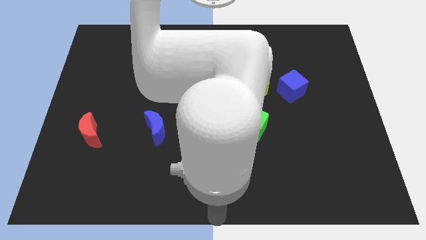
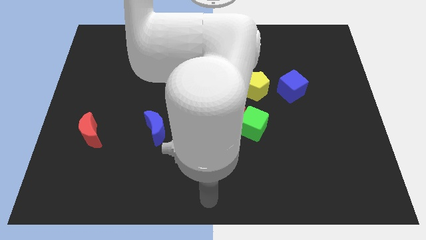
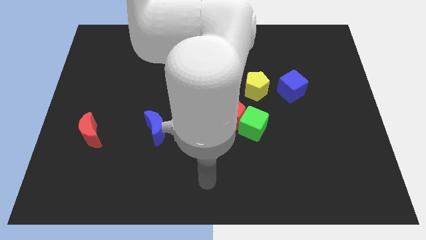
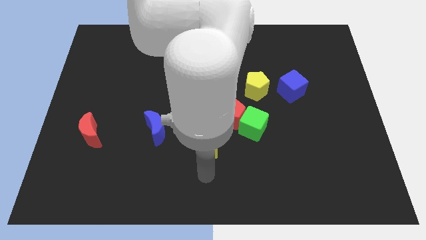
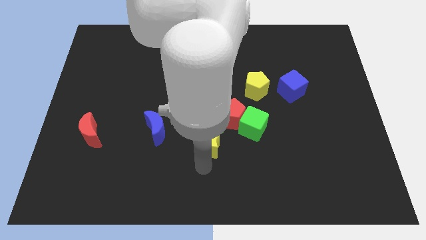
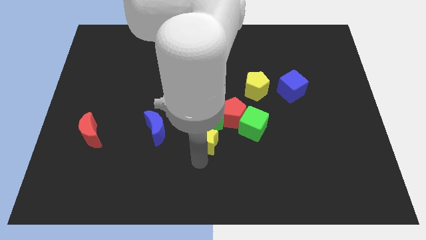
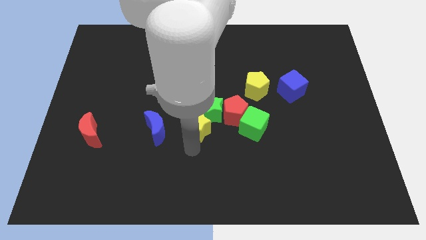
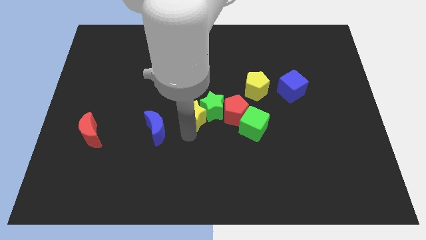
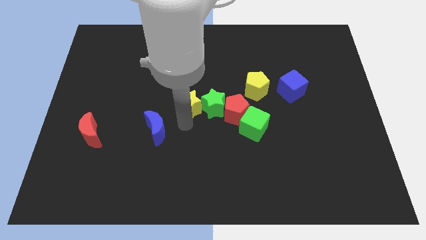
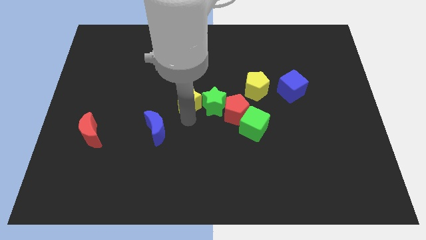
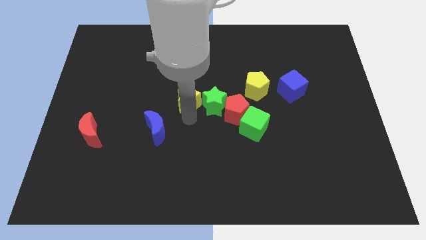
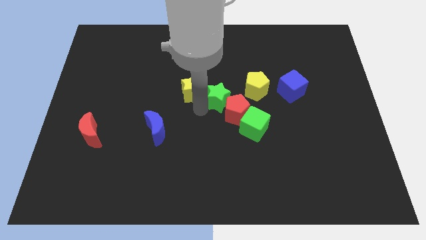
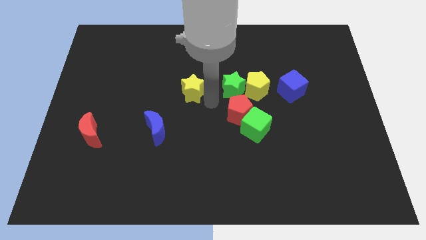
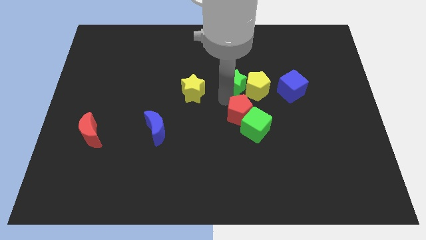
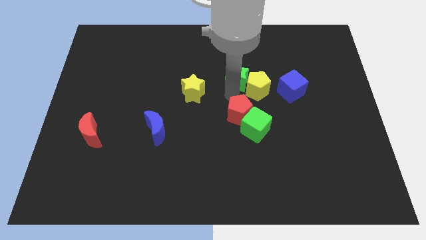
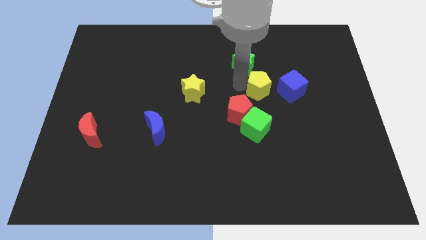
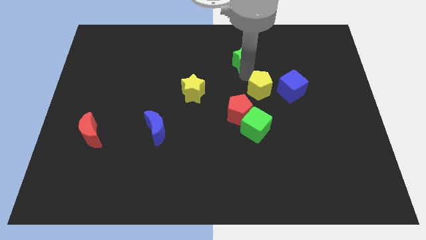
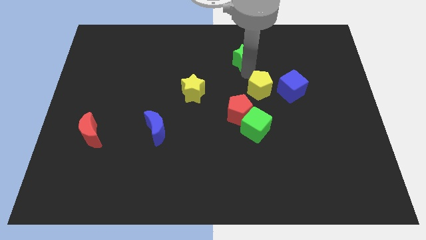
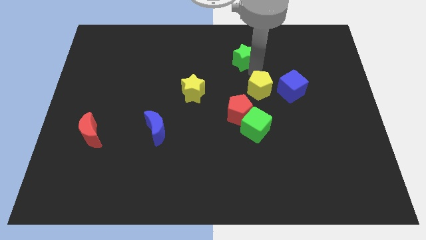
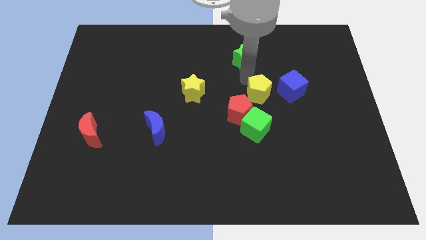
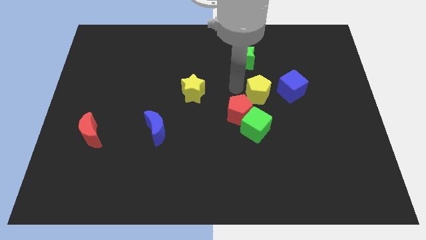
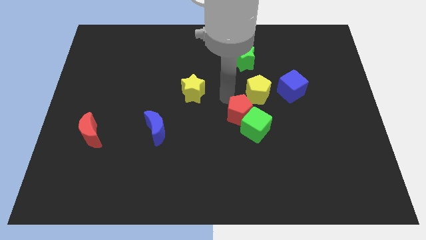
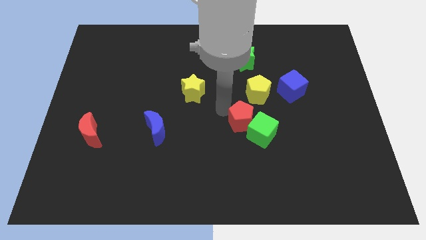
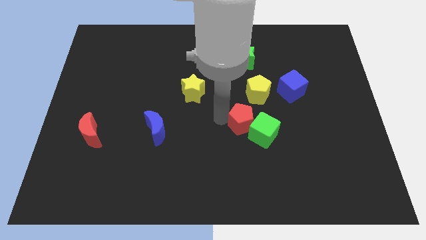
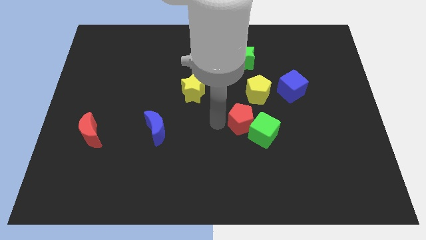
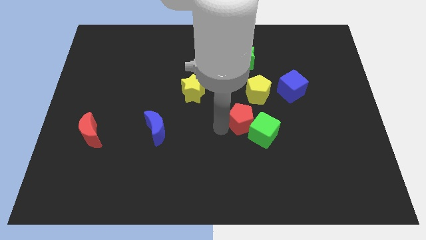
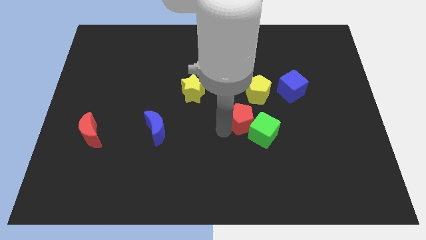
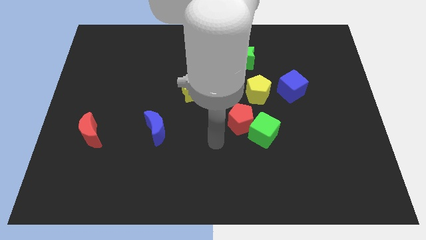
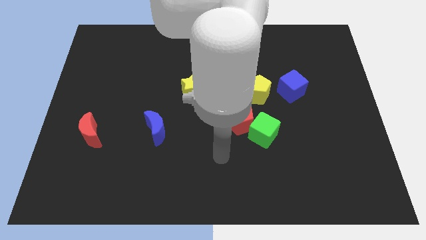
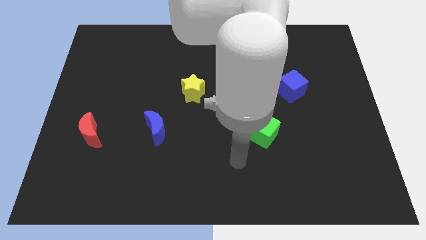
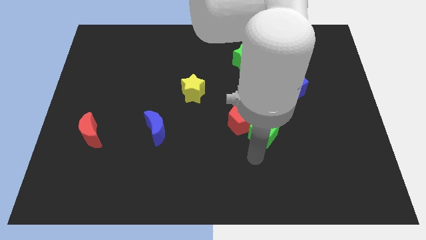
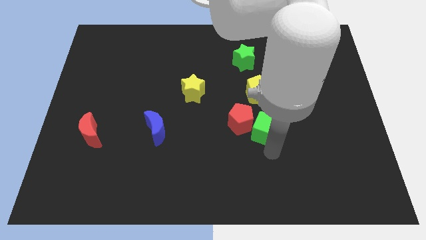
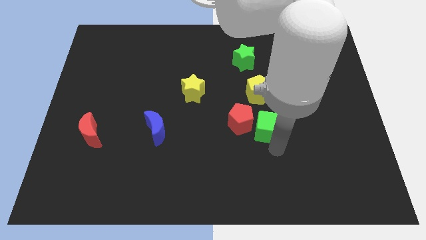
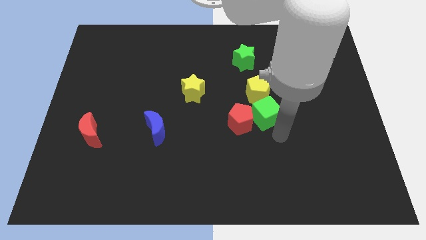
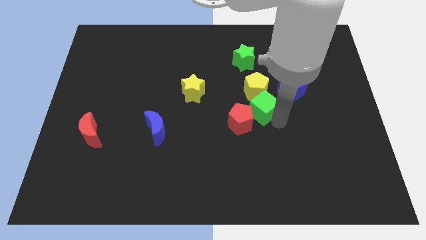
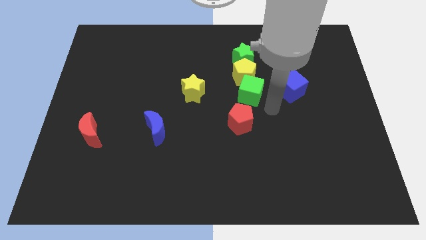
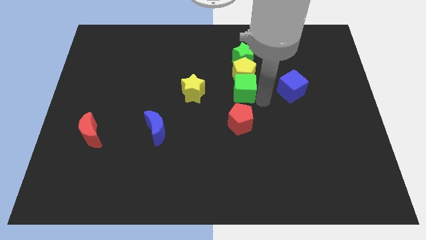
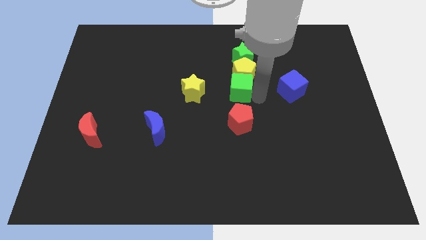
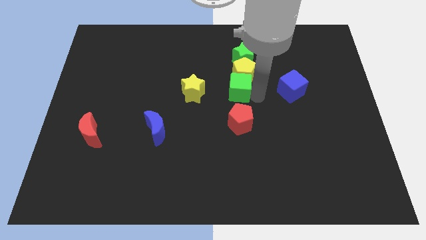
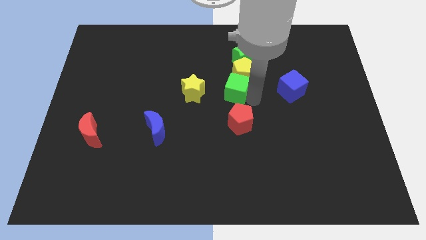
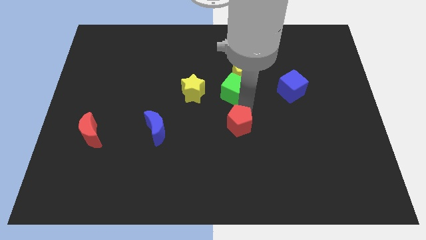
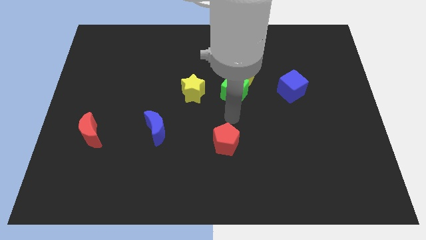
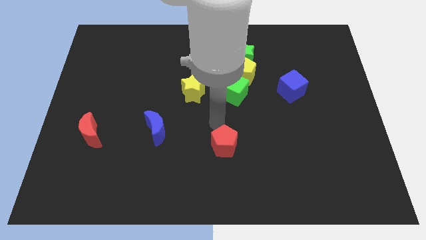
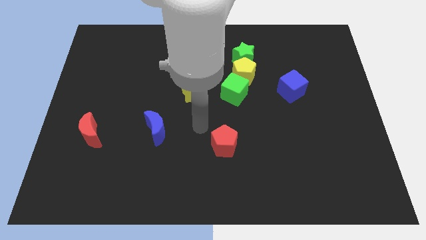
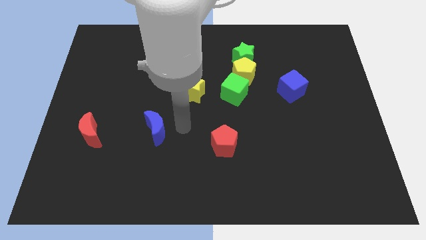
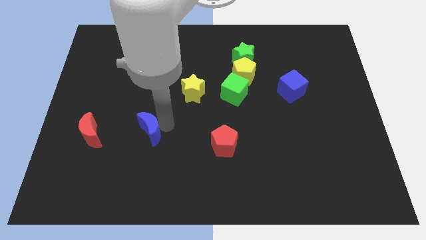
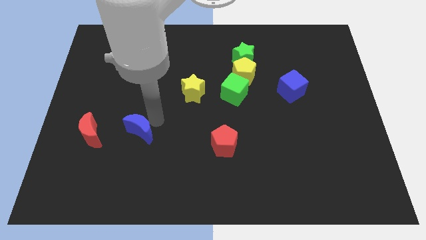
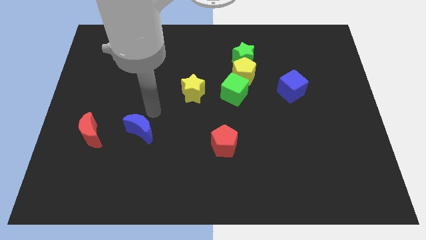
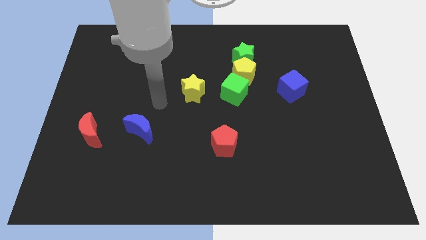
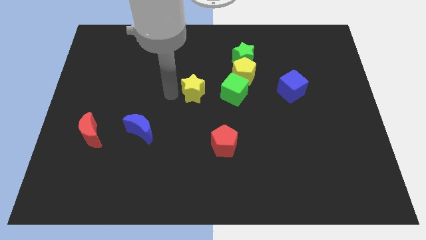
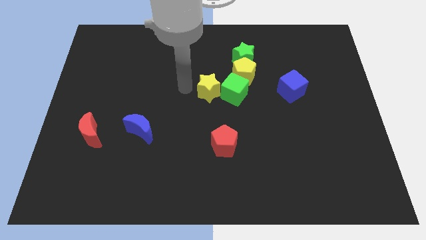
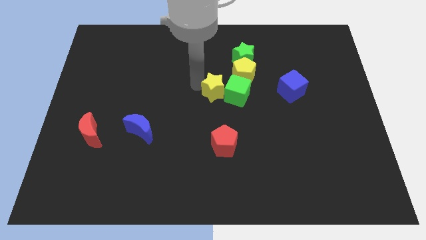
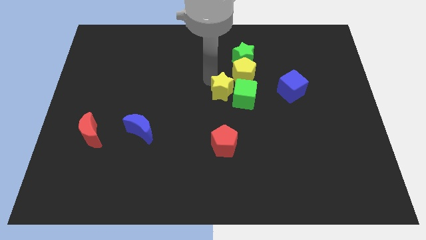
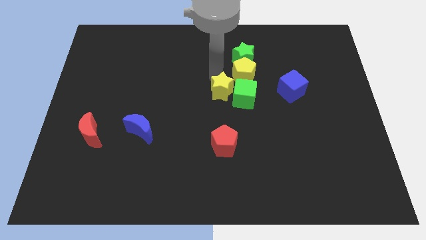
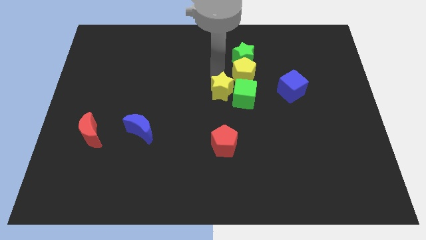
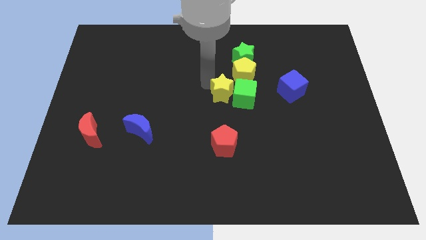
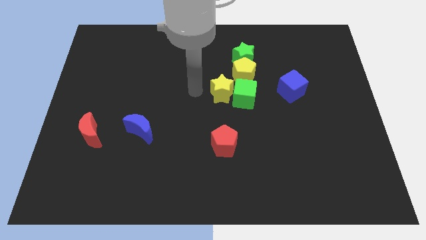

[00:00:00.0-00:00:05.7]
place the yellow star left to the green cube

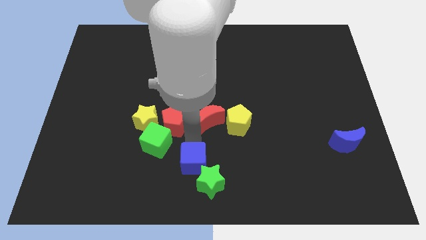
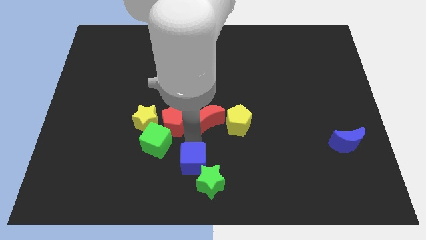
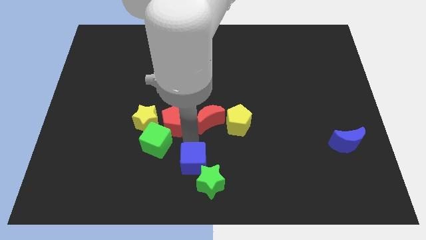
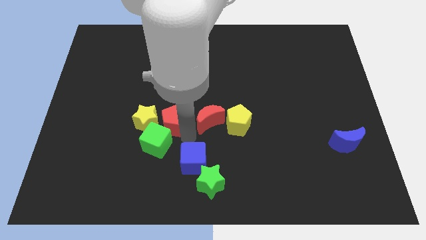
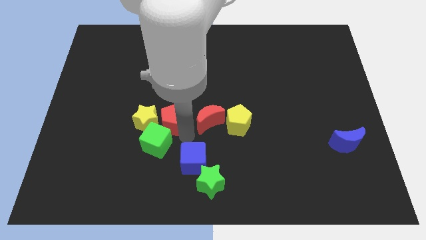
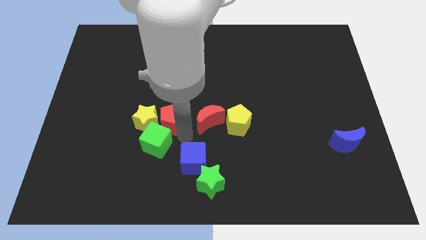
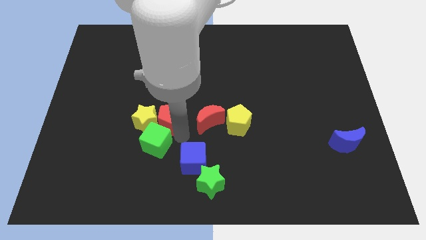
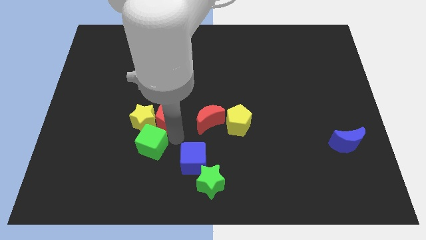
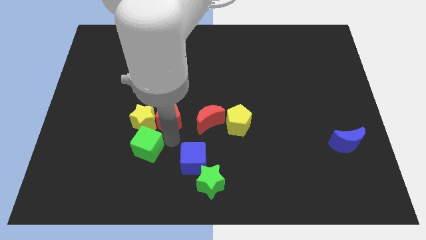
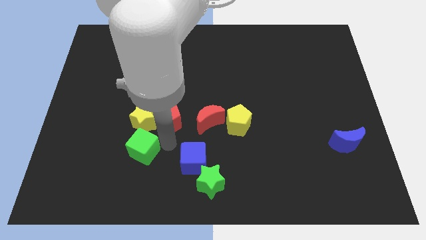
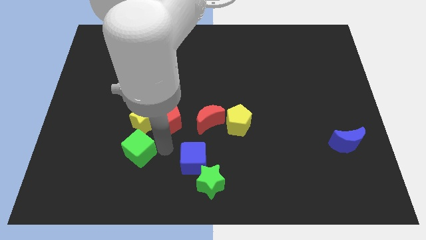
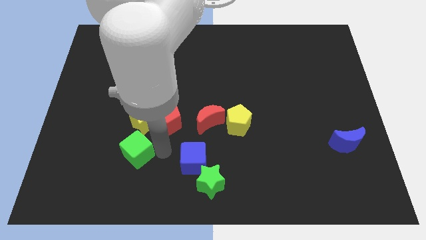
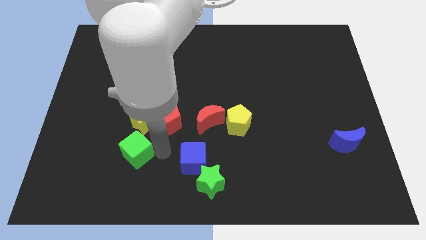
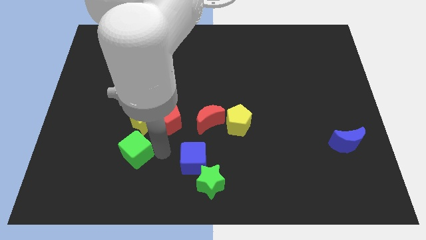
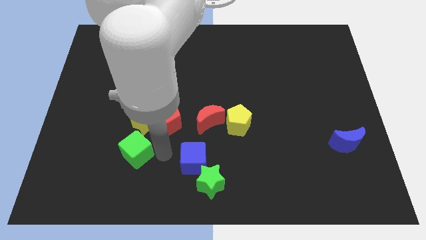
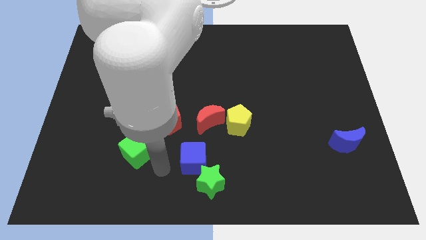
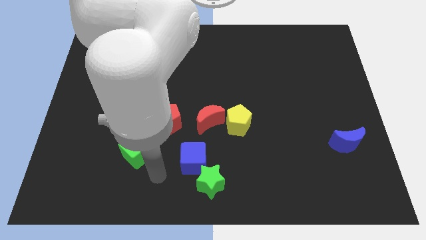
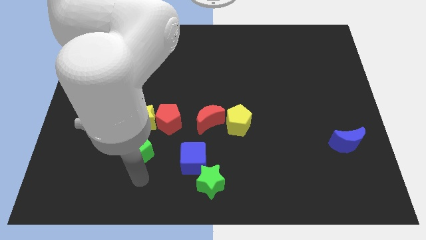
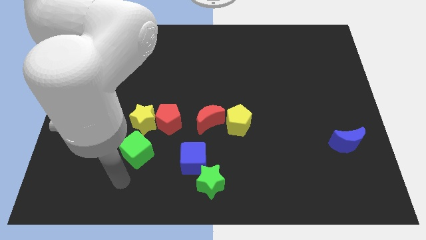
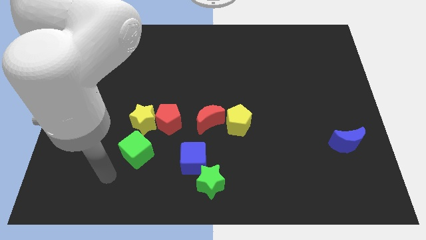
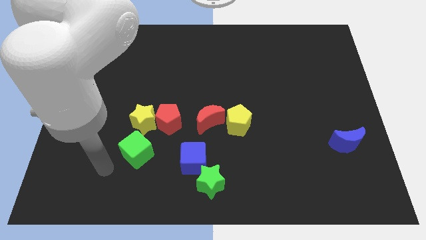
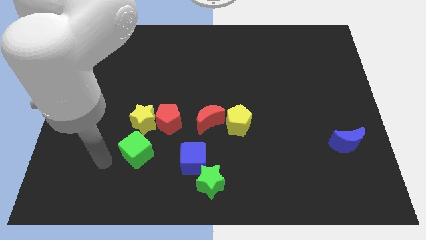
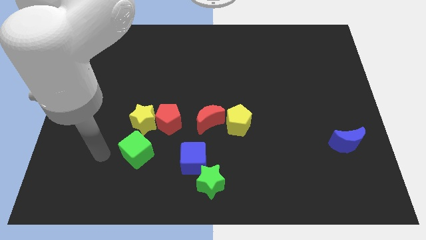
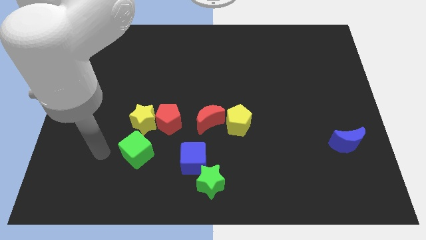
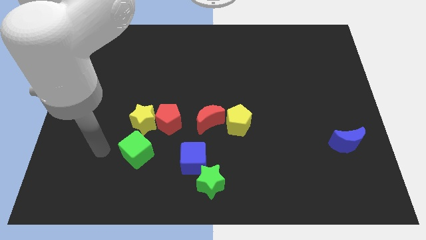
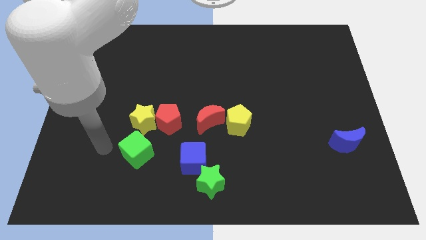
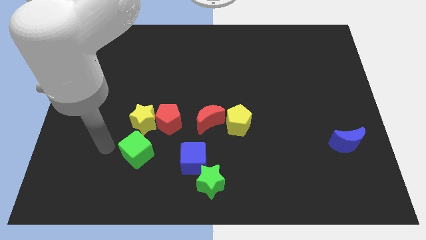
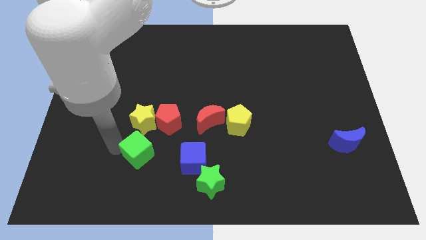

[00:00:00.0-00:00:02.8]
push the red pentagon and green cube slightly towards the left side of the board

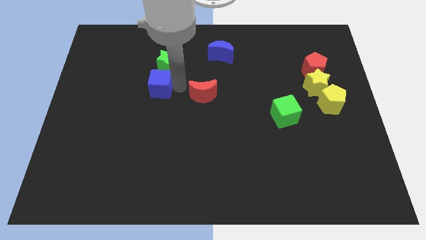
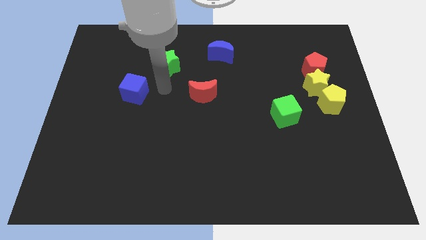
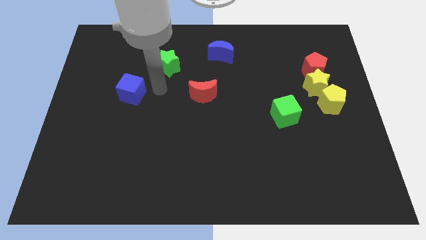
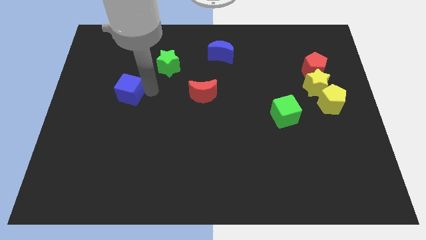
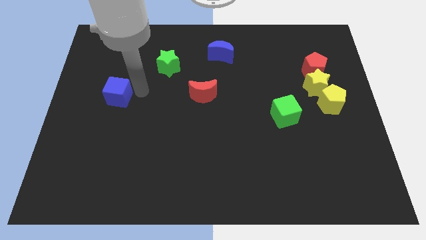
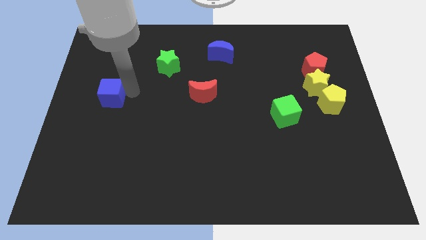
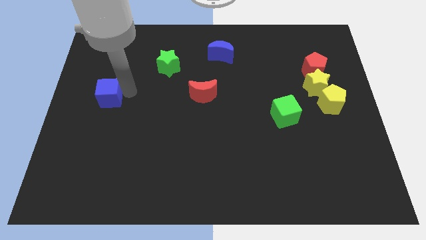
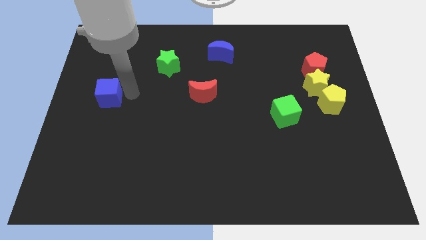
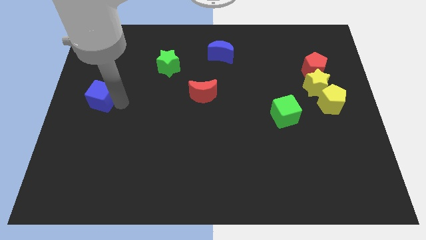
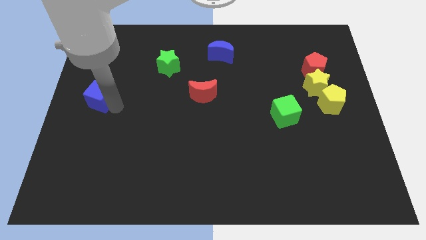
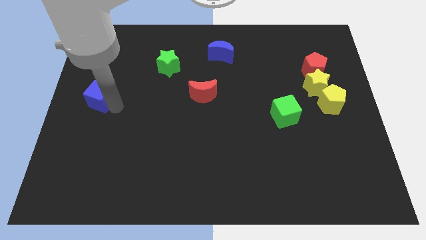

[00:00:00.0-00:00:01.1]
move blue cube towards the left side
